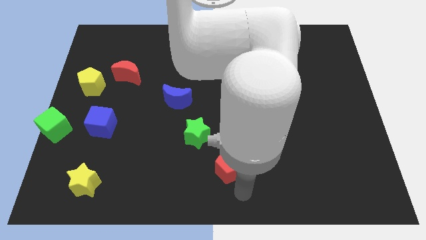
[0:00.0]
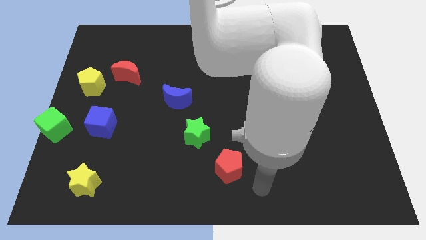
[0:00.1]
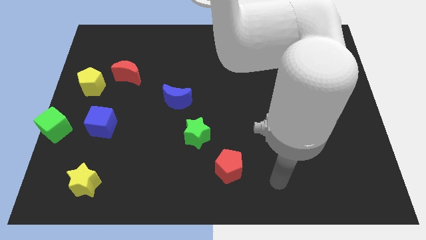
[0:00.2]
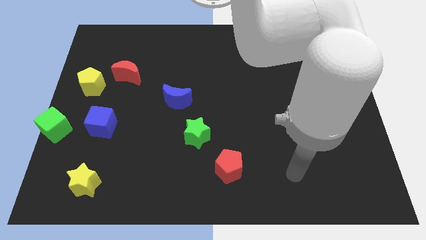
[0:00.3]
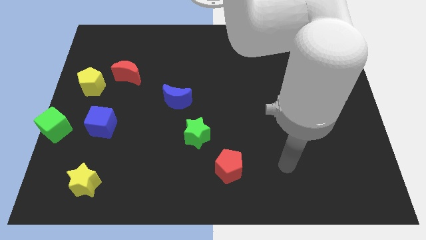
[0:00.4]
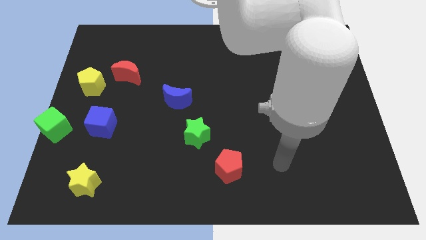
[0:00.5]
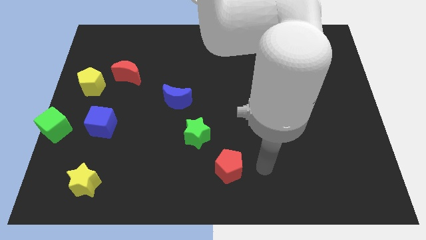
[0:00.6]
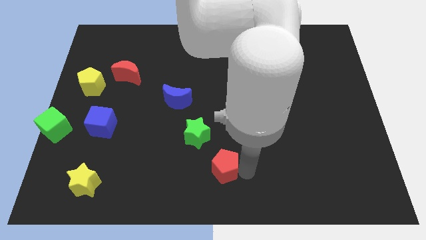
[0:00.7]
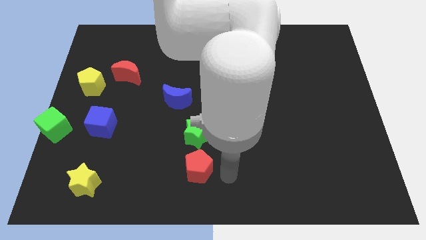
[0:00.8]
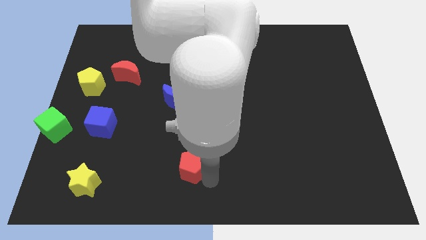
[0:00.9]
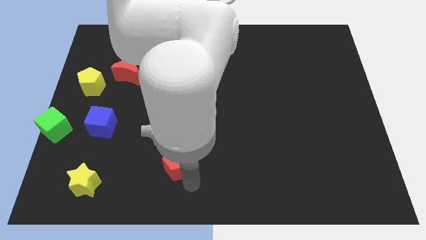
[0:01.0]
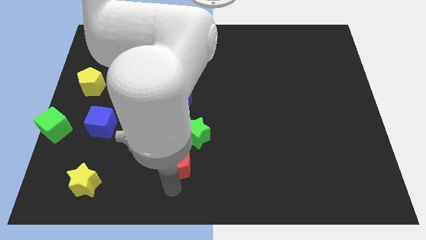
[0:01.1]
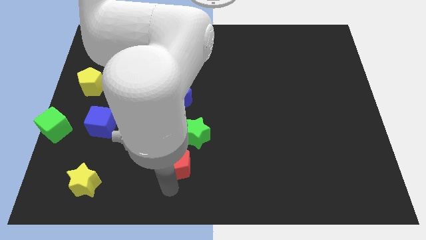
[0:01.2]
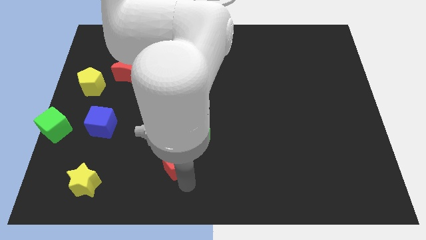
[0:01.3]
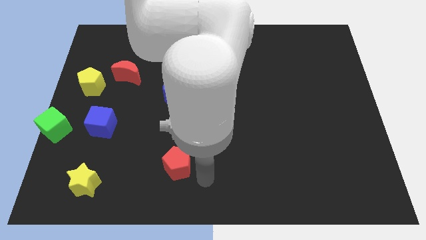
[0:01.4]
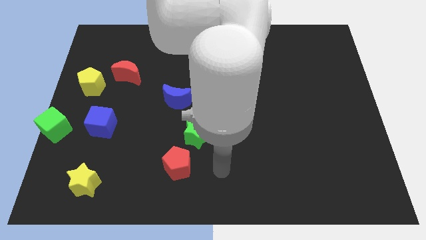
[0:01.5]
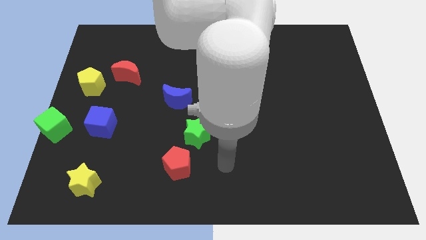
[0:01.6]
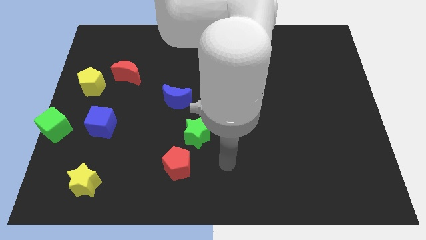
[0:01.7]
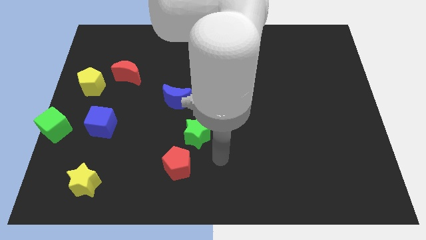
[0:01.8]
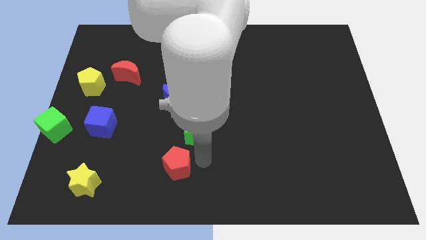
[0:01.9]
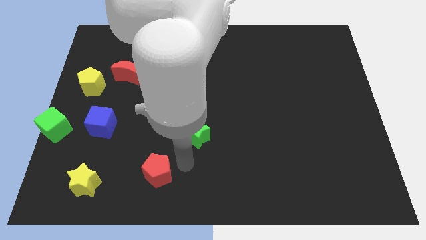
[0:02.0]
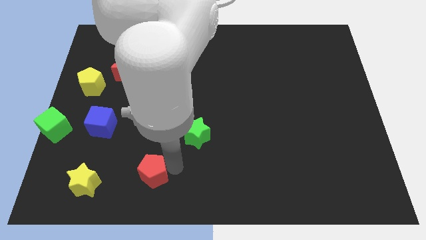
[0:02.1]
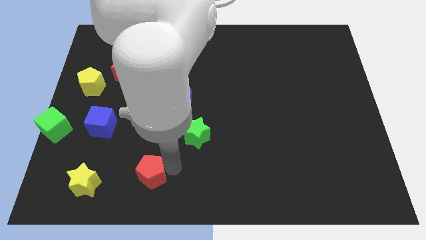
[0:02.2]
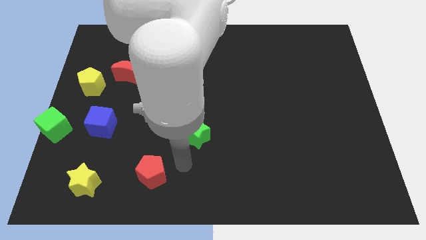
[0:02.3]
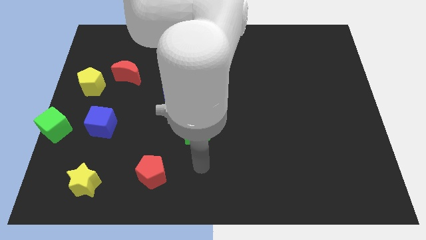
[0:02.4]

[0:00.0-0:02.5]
place the red pentagon in between the yellow star and green star

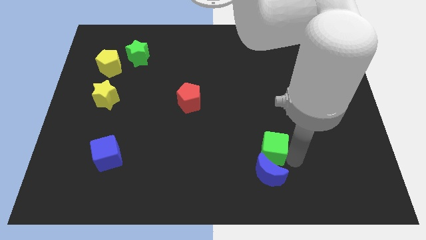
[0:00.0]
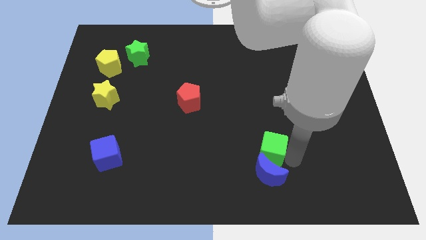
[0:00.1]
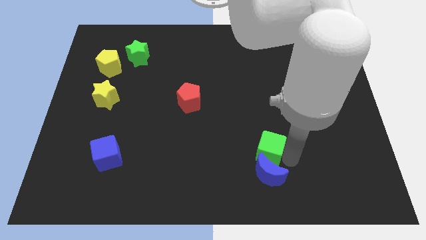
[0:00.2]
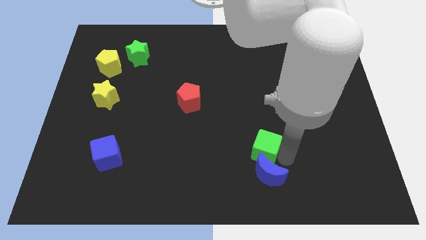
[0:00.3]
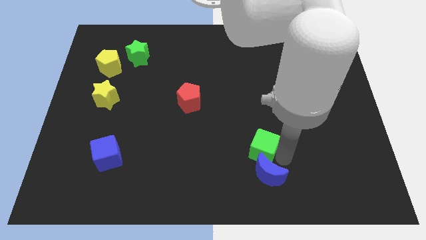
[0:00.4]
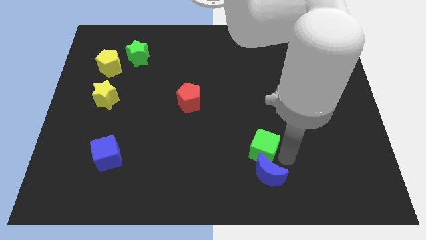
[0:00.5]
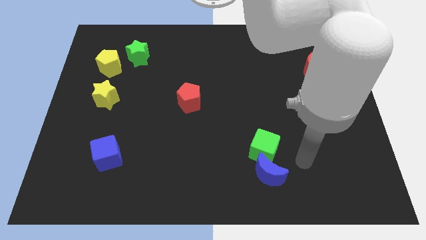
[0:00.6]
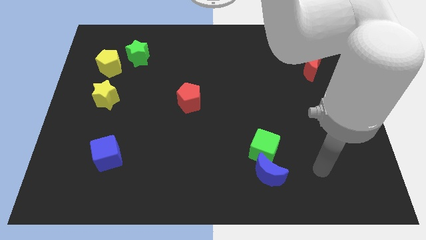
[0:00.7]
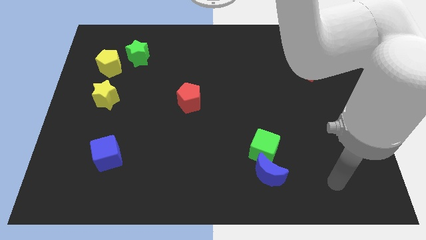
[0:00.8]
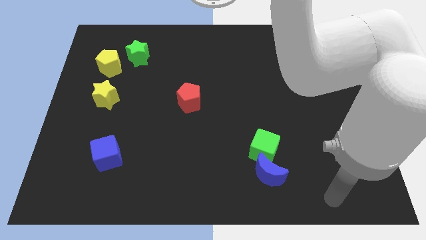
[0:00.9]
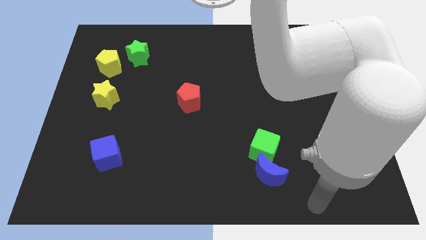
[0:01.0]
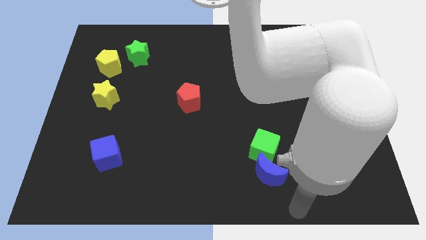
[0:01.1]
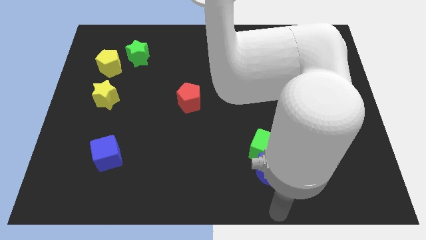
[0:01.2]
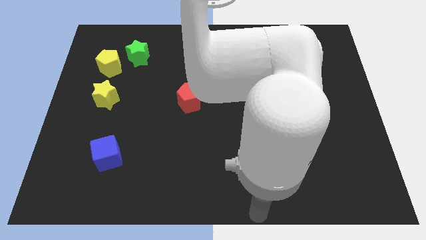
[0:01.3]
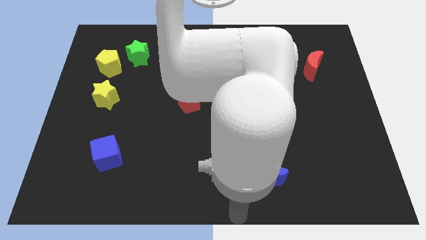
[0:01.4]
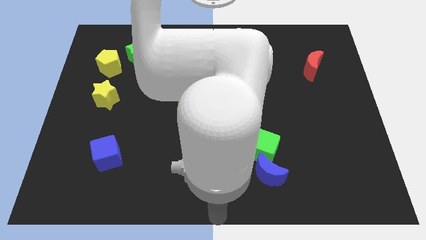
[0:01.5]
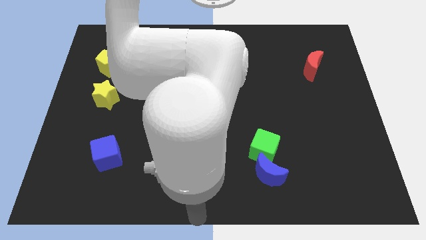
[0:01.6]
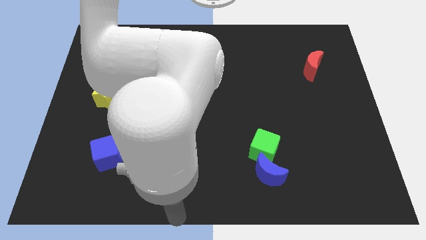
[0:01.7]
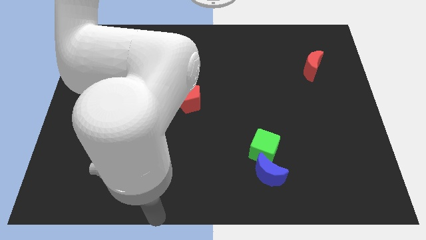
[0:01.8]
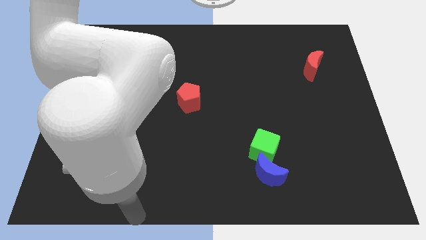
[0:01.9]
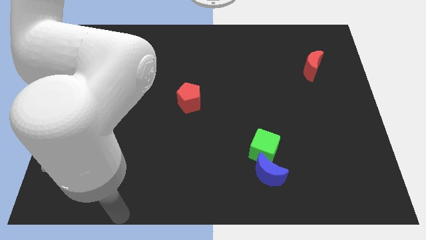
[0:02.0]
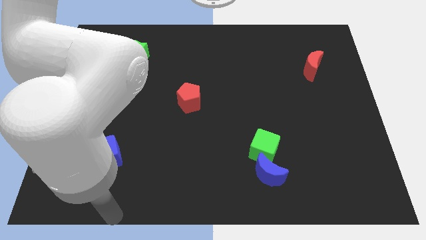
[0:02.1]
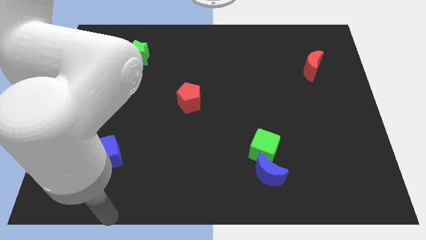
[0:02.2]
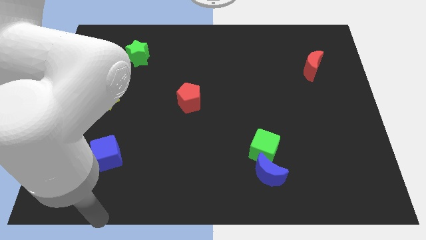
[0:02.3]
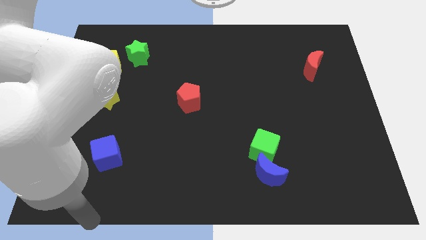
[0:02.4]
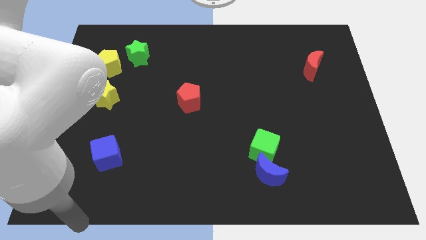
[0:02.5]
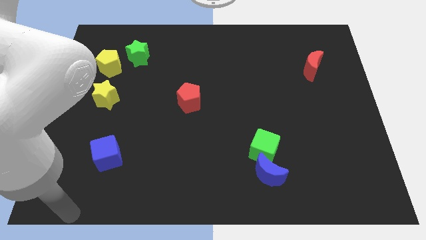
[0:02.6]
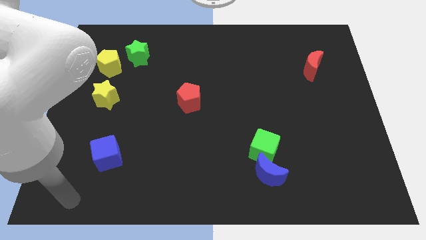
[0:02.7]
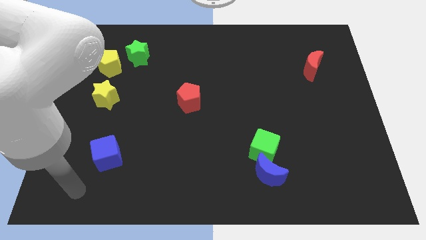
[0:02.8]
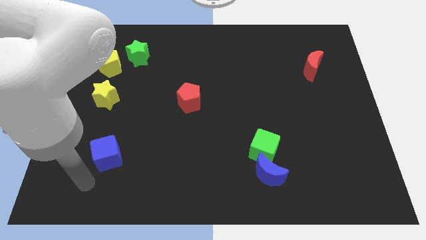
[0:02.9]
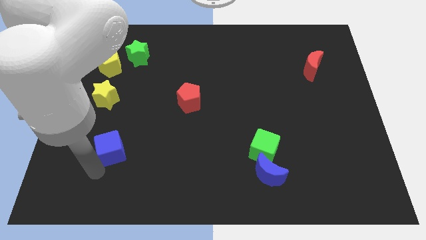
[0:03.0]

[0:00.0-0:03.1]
move your hand away from the green cube

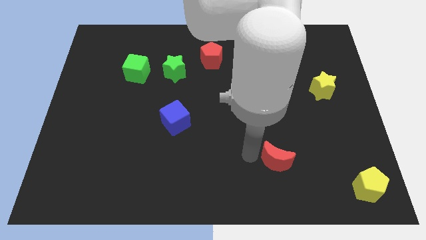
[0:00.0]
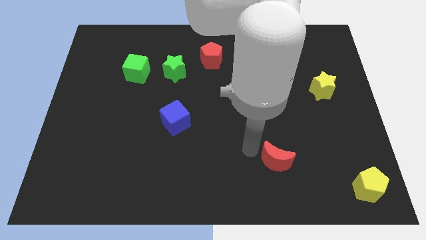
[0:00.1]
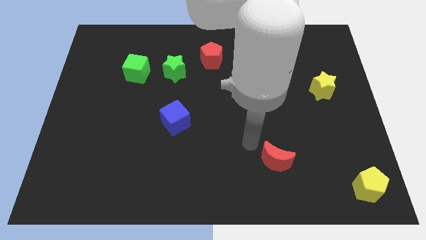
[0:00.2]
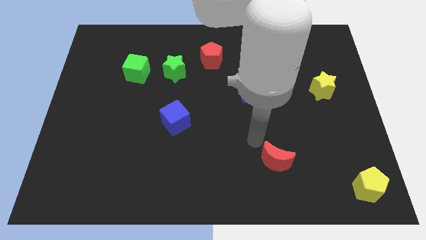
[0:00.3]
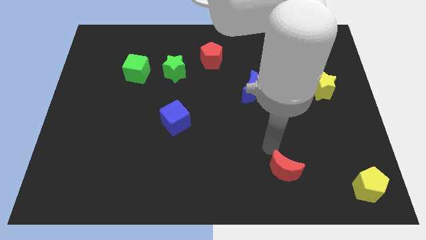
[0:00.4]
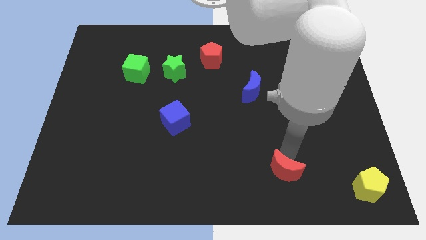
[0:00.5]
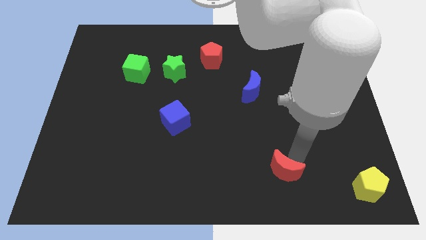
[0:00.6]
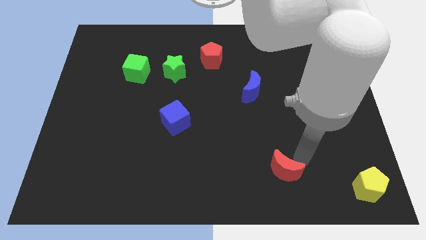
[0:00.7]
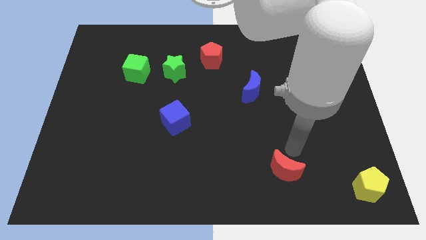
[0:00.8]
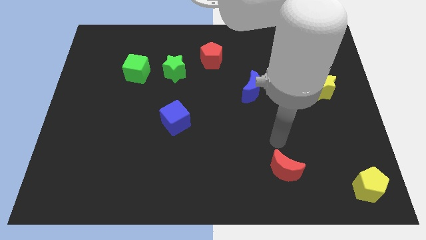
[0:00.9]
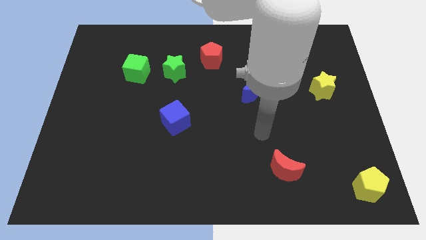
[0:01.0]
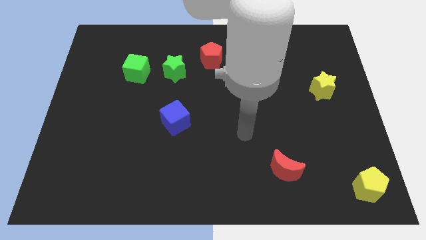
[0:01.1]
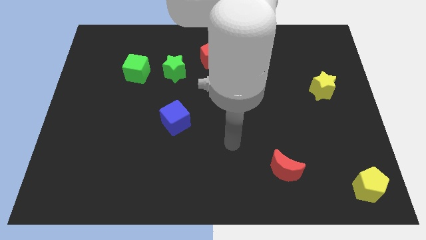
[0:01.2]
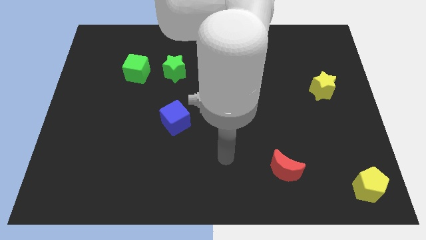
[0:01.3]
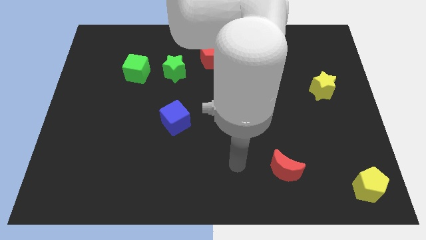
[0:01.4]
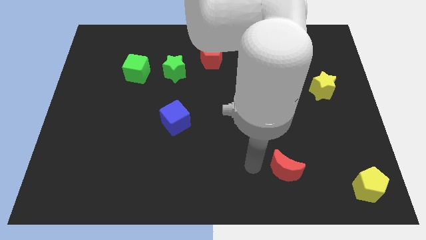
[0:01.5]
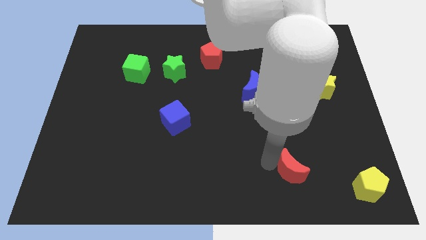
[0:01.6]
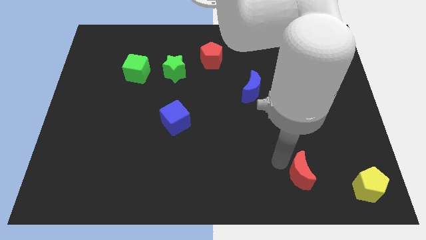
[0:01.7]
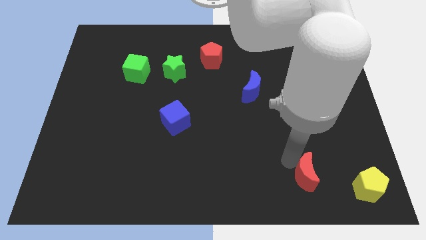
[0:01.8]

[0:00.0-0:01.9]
push the red moon to the left side of the yellow pentagon

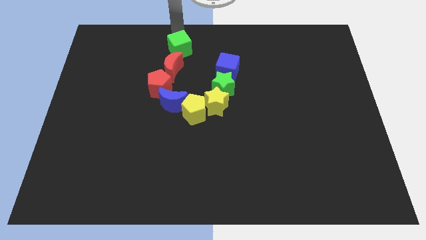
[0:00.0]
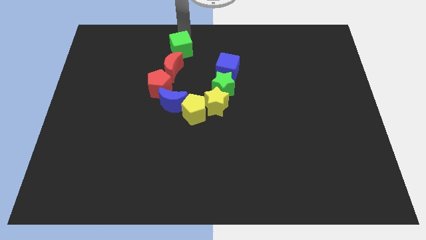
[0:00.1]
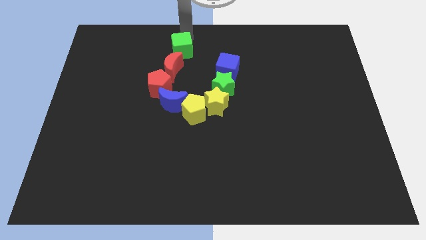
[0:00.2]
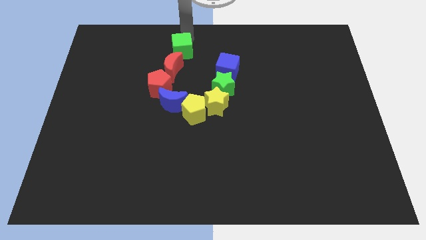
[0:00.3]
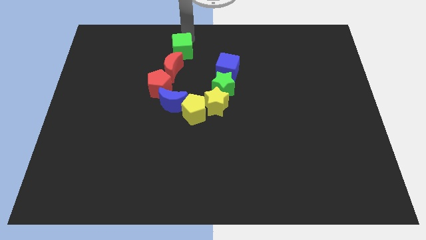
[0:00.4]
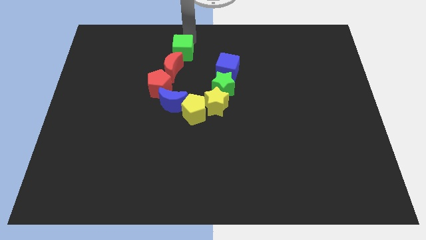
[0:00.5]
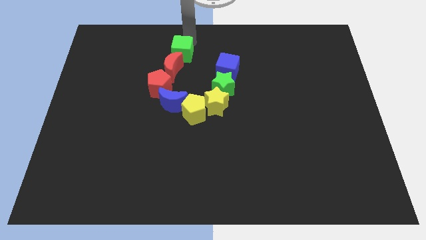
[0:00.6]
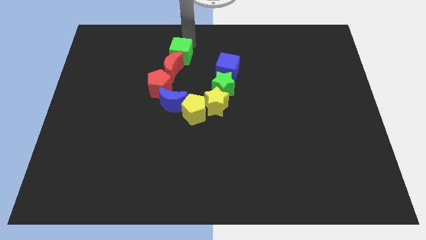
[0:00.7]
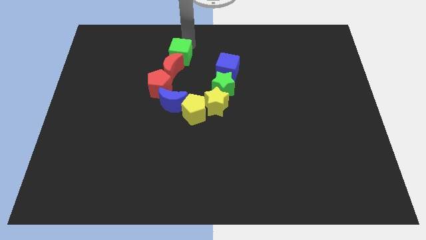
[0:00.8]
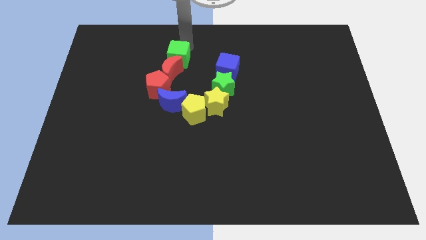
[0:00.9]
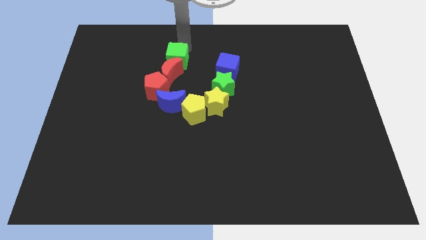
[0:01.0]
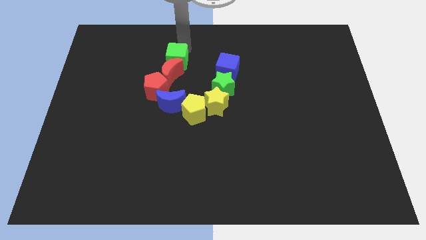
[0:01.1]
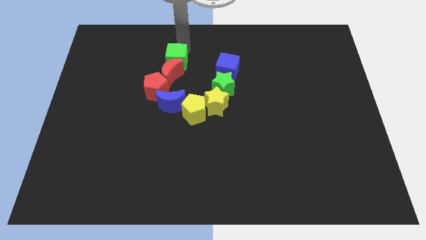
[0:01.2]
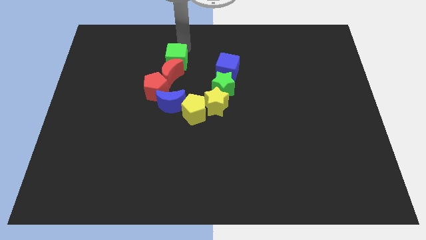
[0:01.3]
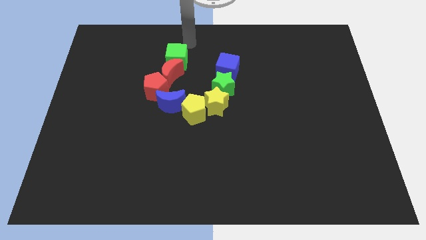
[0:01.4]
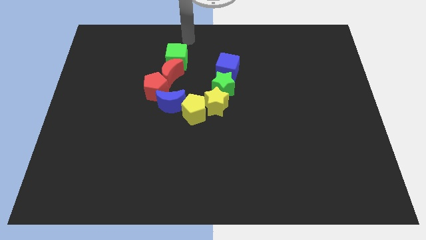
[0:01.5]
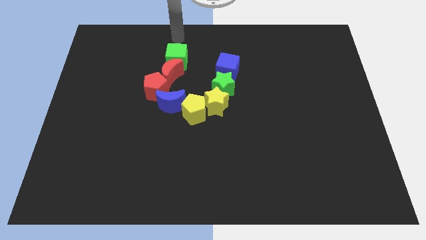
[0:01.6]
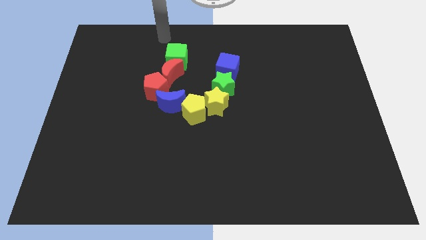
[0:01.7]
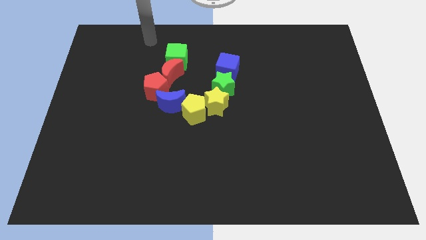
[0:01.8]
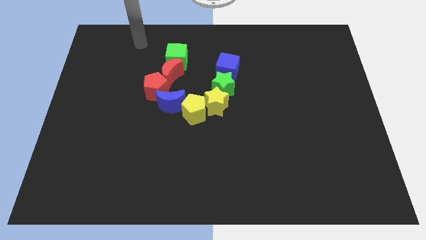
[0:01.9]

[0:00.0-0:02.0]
push the green cube into the red moon
